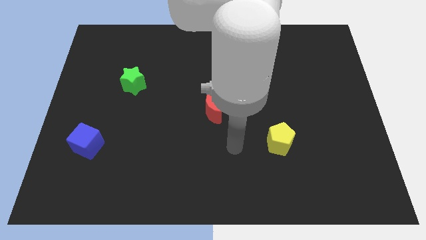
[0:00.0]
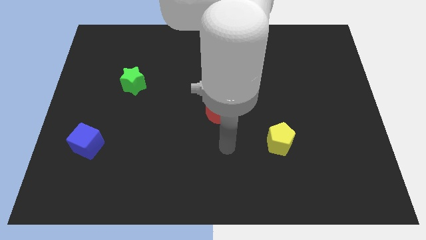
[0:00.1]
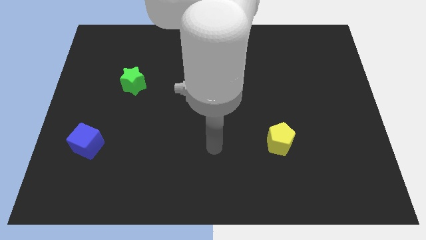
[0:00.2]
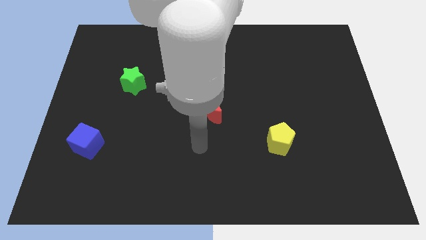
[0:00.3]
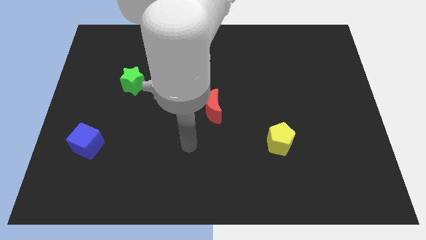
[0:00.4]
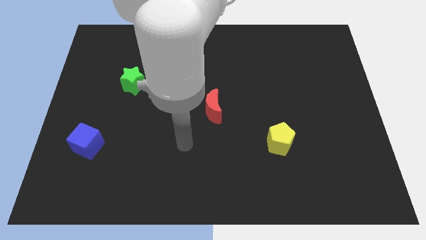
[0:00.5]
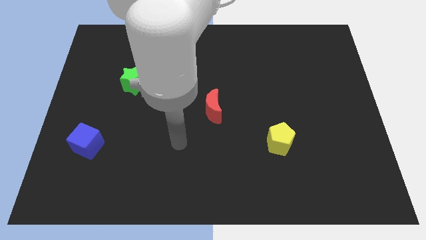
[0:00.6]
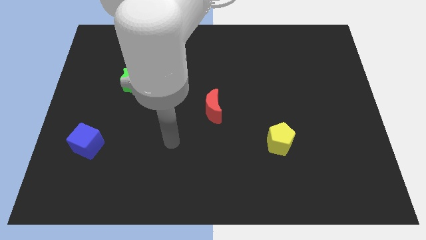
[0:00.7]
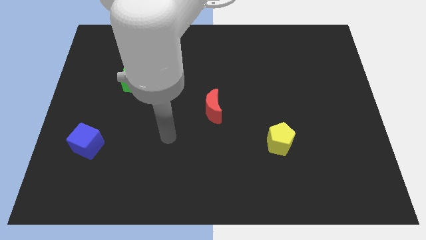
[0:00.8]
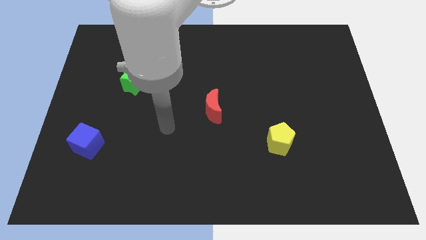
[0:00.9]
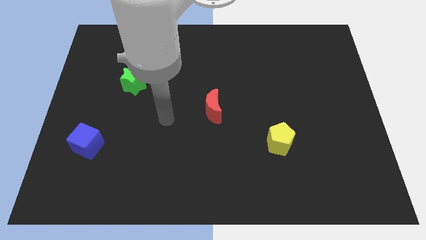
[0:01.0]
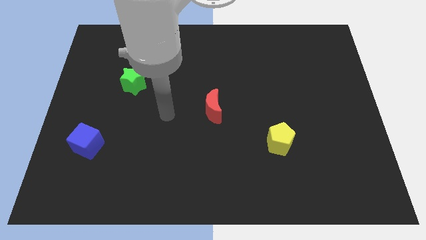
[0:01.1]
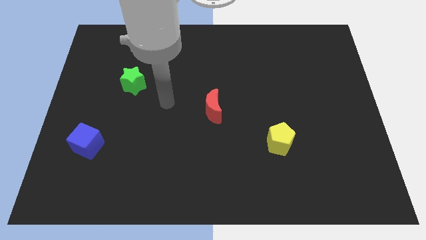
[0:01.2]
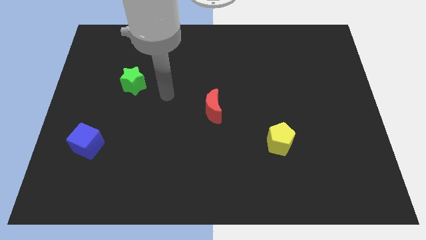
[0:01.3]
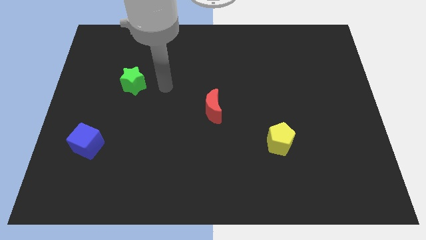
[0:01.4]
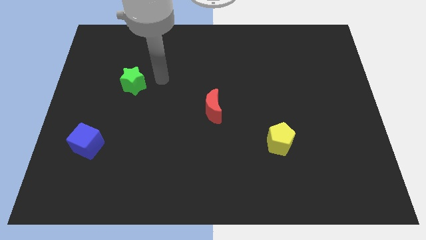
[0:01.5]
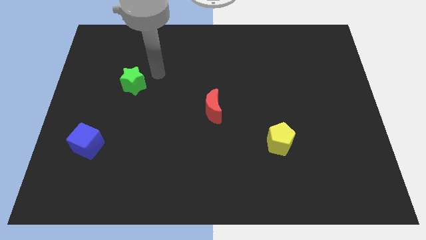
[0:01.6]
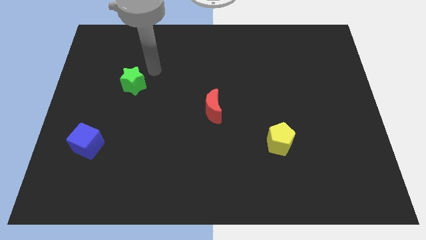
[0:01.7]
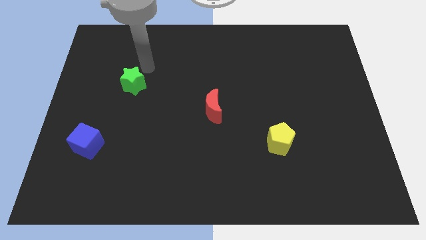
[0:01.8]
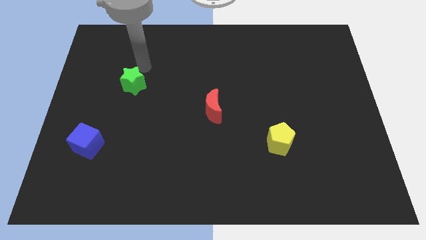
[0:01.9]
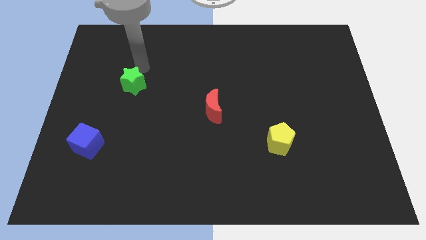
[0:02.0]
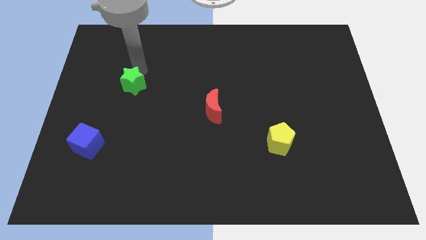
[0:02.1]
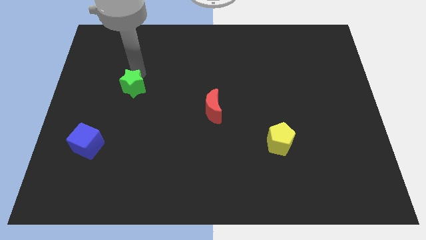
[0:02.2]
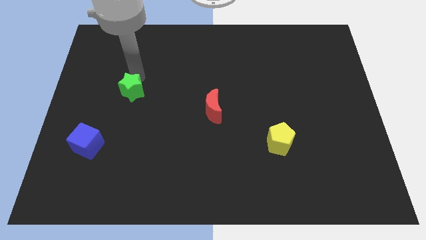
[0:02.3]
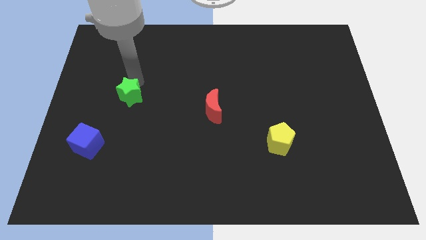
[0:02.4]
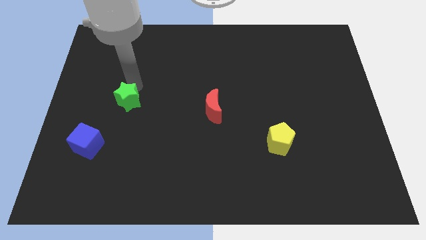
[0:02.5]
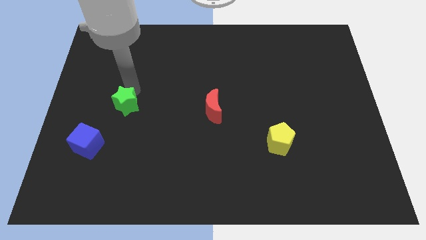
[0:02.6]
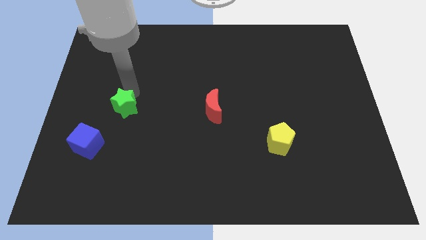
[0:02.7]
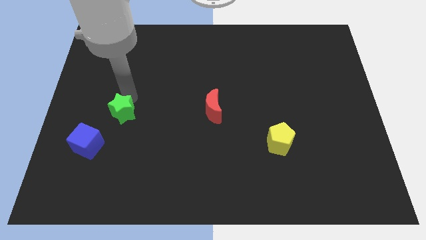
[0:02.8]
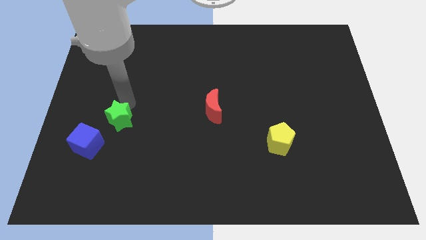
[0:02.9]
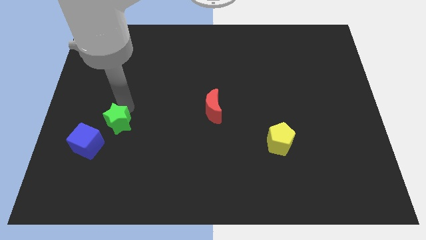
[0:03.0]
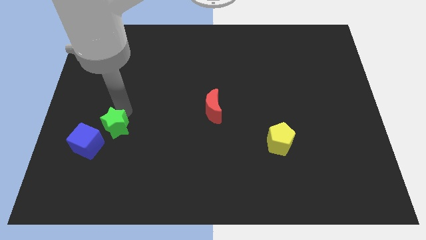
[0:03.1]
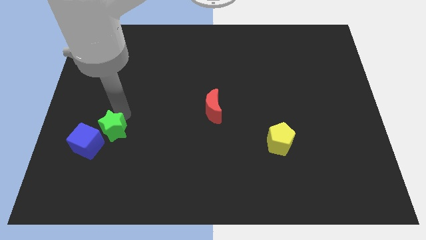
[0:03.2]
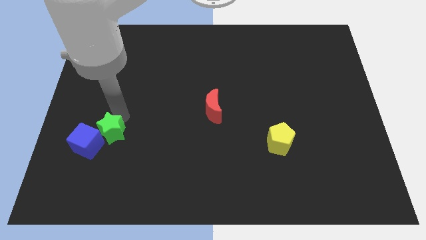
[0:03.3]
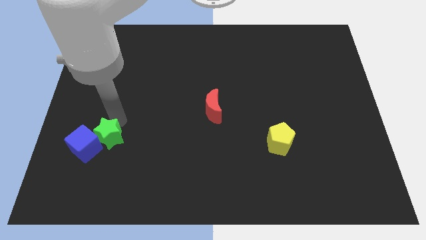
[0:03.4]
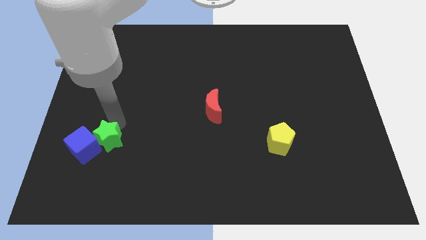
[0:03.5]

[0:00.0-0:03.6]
slide the star next to the blue cube

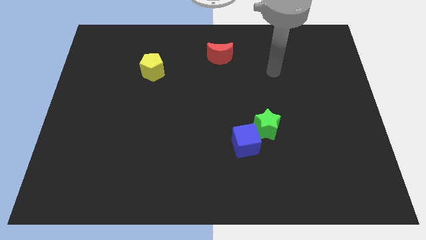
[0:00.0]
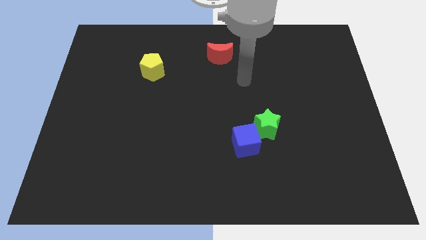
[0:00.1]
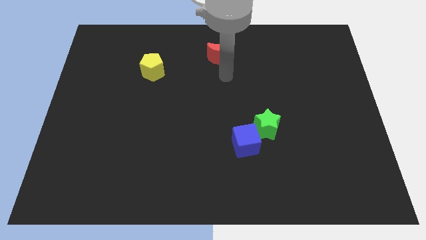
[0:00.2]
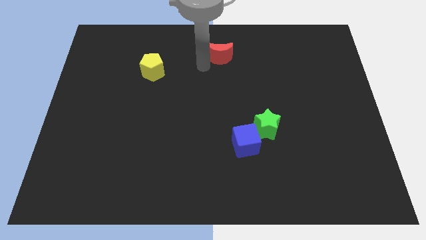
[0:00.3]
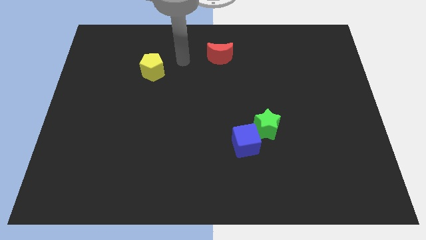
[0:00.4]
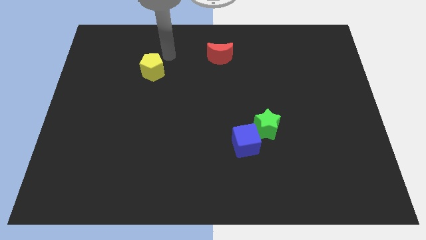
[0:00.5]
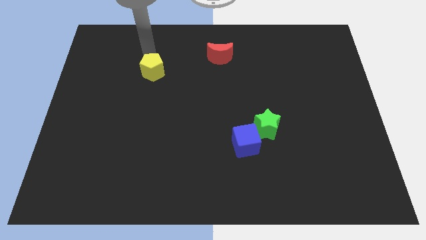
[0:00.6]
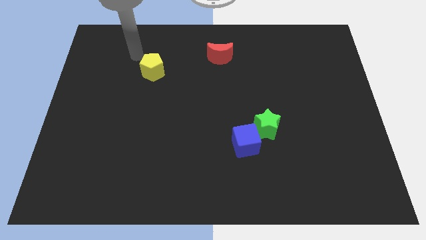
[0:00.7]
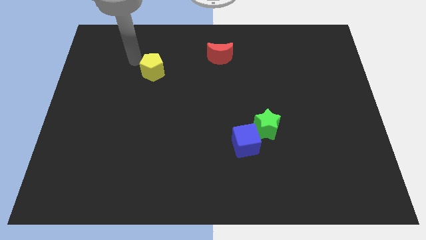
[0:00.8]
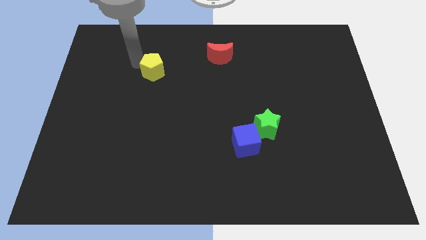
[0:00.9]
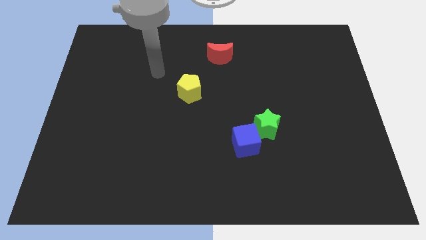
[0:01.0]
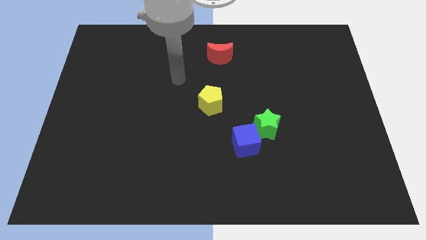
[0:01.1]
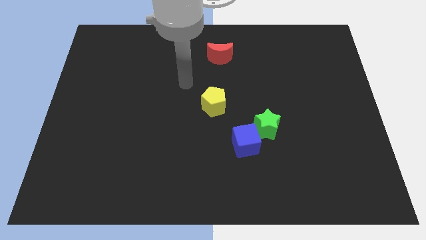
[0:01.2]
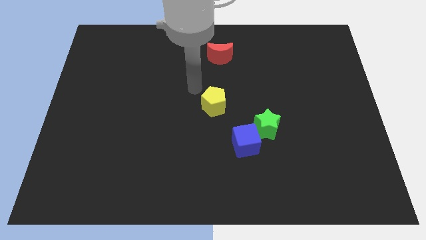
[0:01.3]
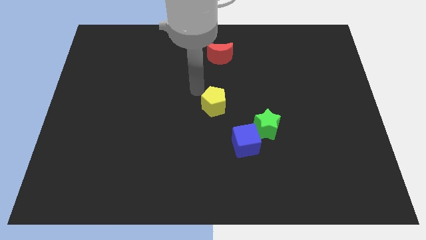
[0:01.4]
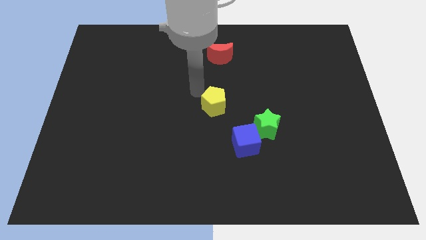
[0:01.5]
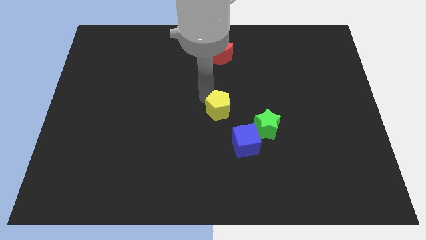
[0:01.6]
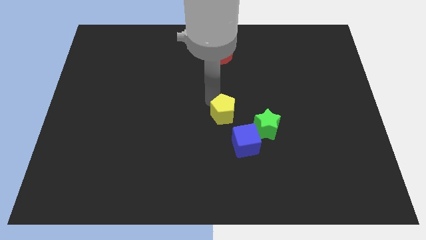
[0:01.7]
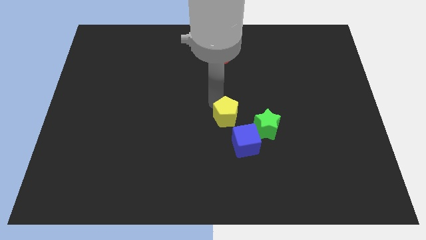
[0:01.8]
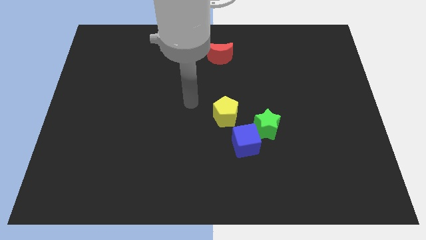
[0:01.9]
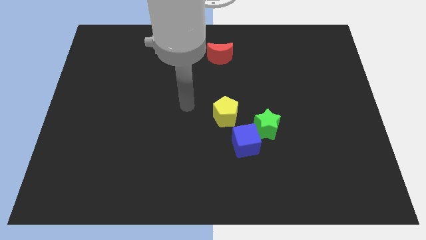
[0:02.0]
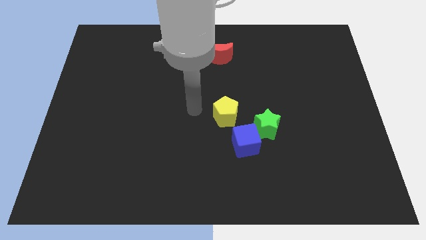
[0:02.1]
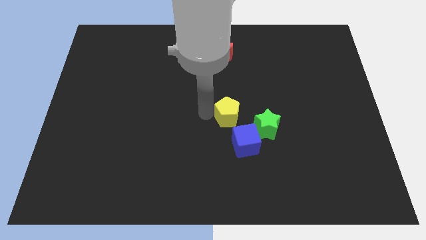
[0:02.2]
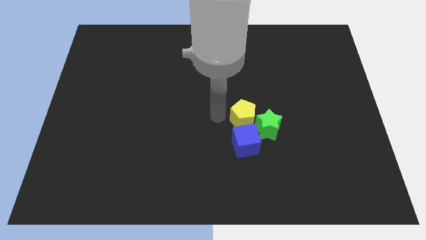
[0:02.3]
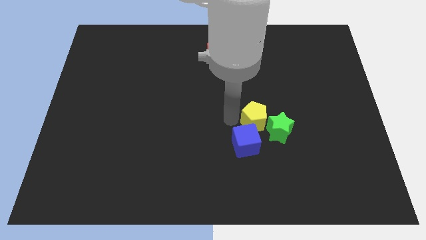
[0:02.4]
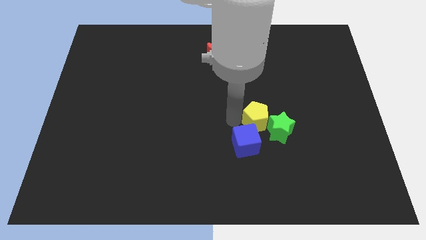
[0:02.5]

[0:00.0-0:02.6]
put the yellow block to the green star

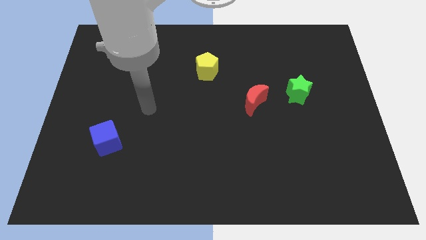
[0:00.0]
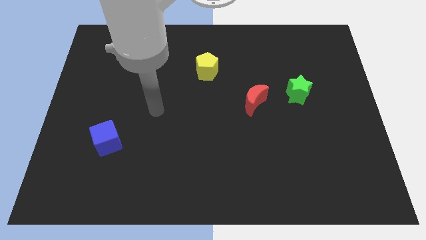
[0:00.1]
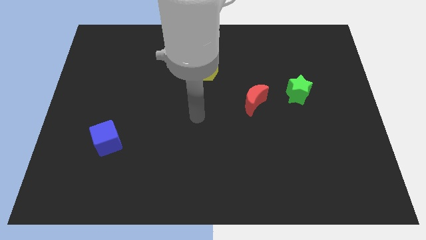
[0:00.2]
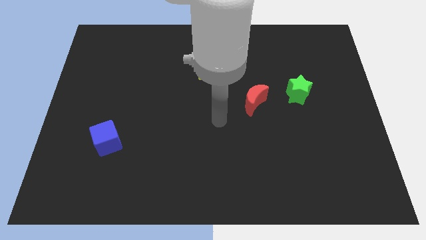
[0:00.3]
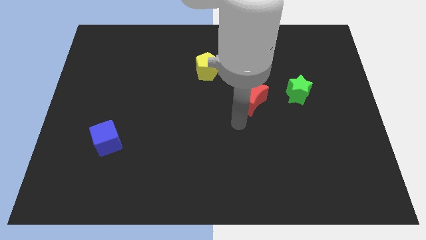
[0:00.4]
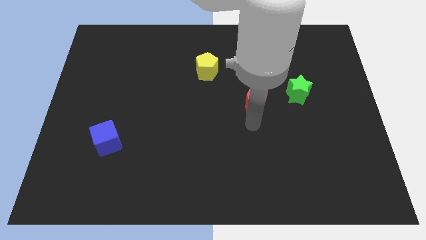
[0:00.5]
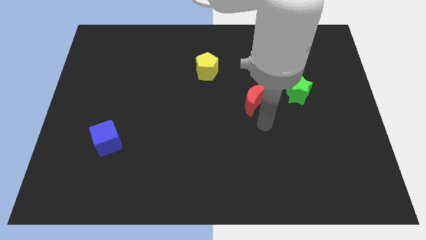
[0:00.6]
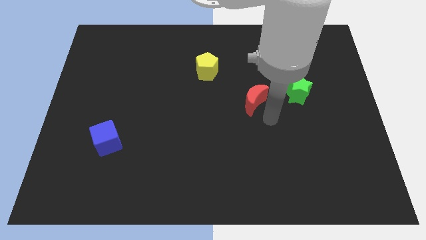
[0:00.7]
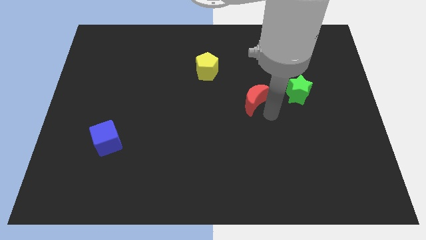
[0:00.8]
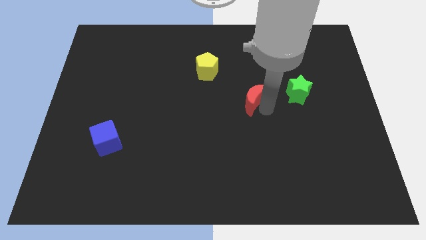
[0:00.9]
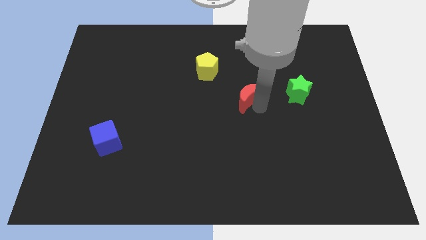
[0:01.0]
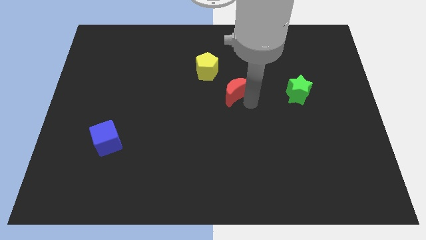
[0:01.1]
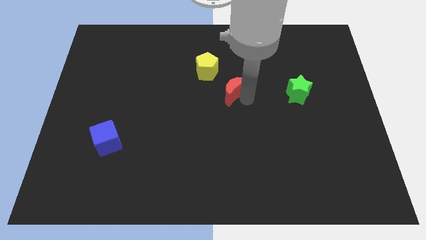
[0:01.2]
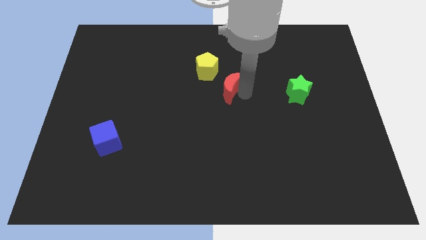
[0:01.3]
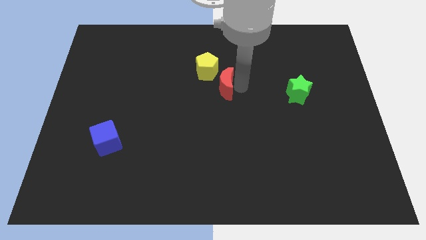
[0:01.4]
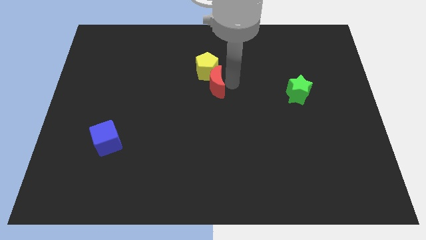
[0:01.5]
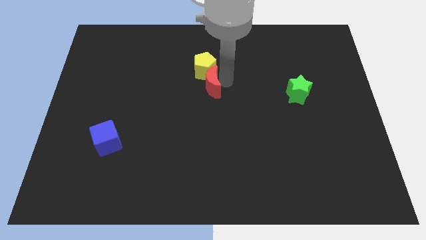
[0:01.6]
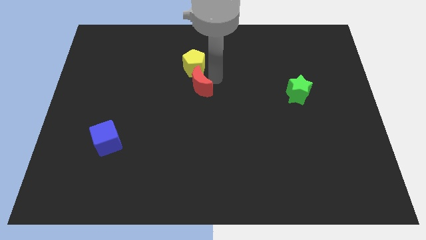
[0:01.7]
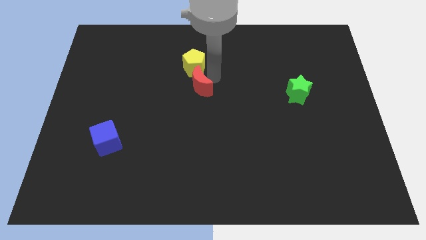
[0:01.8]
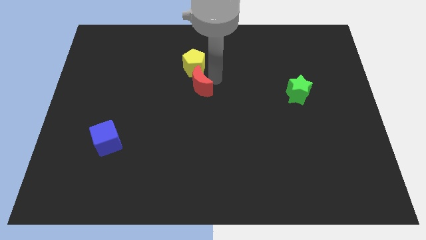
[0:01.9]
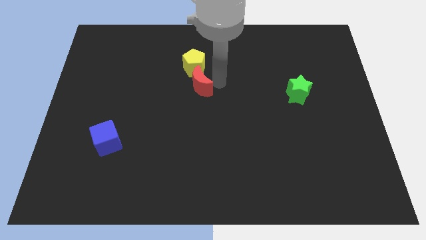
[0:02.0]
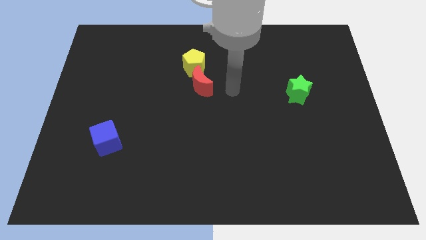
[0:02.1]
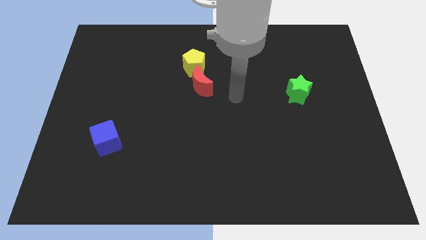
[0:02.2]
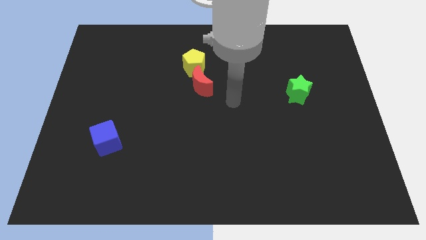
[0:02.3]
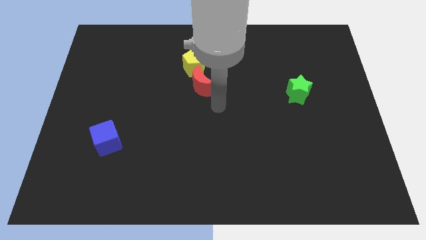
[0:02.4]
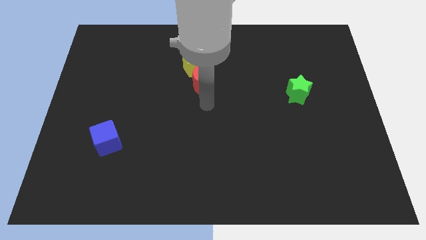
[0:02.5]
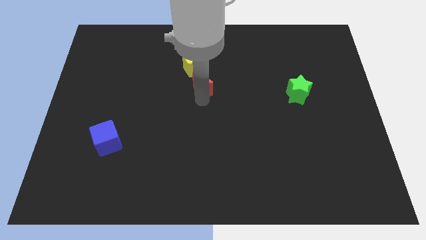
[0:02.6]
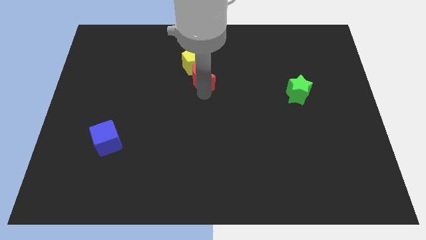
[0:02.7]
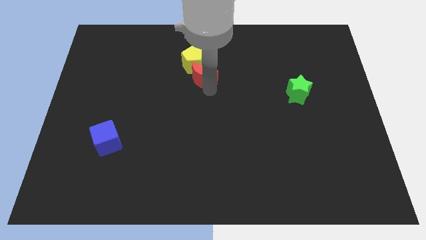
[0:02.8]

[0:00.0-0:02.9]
push the moon close to the yellow pentagon
